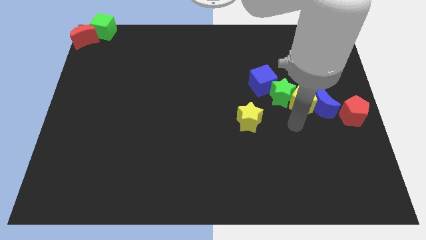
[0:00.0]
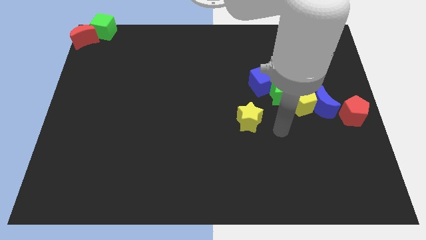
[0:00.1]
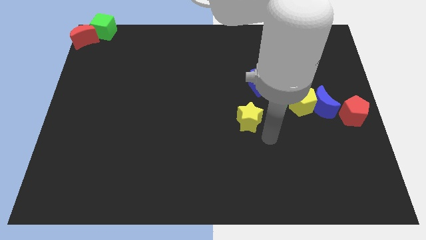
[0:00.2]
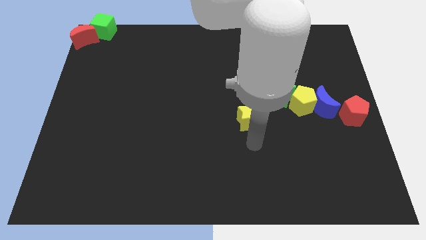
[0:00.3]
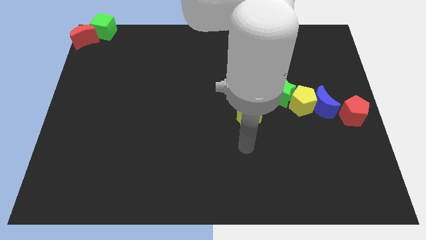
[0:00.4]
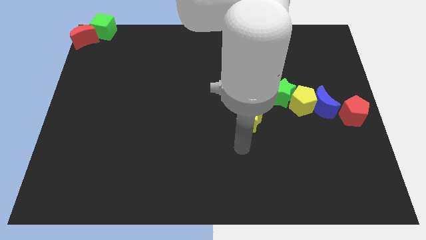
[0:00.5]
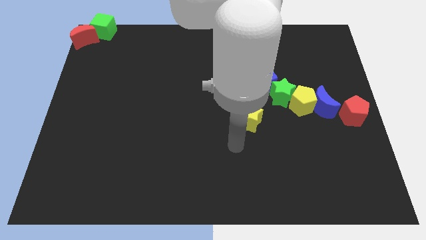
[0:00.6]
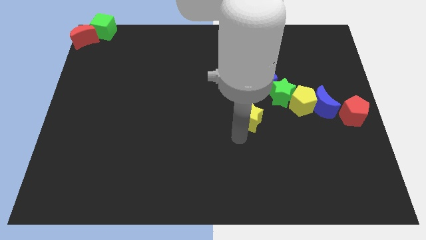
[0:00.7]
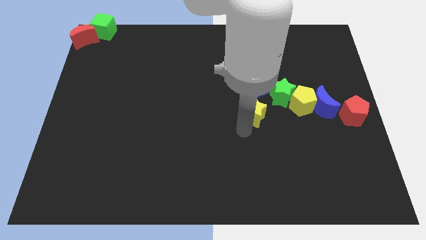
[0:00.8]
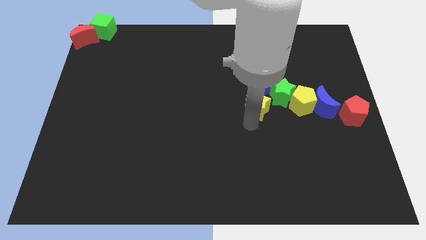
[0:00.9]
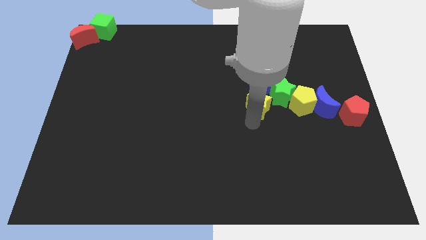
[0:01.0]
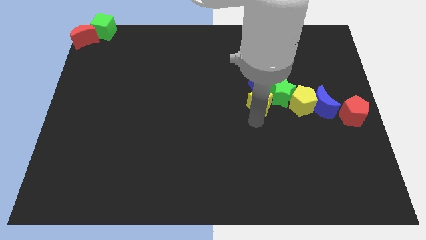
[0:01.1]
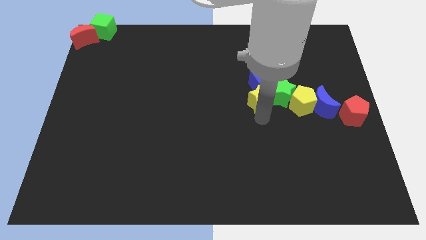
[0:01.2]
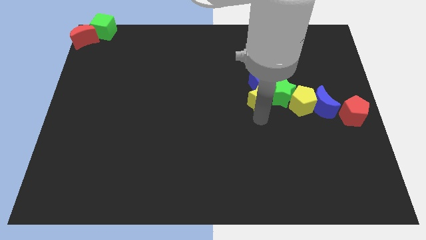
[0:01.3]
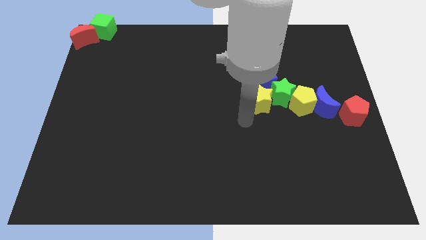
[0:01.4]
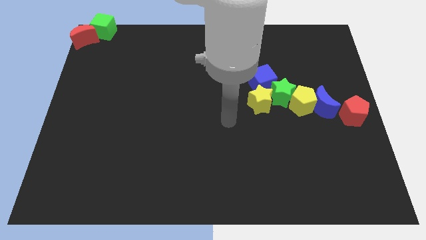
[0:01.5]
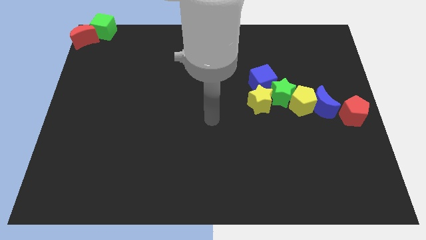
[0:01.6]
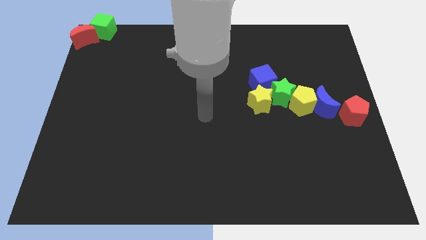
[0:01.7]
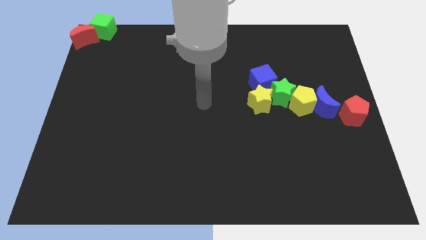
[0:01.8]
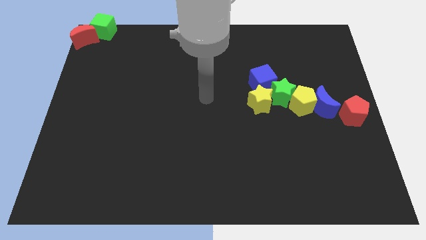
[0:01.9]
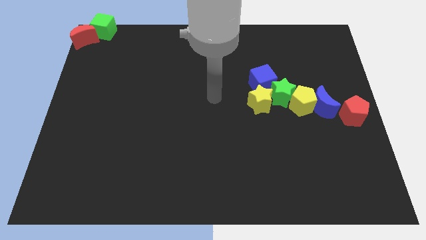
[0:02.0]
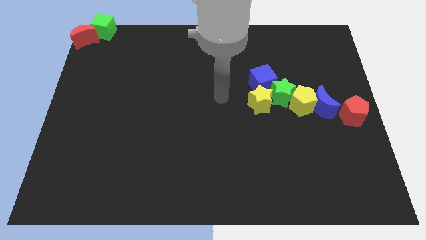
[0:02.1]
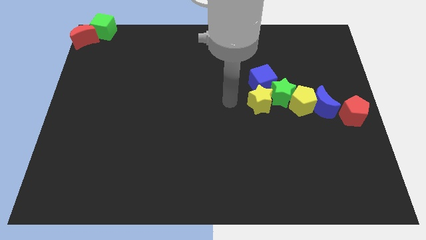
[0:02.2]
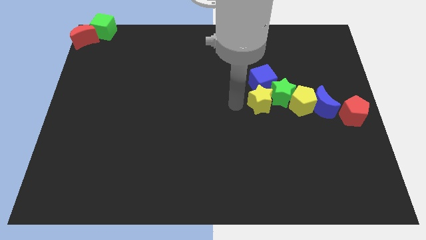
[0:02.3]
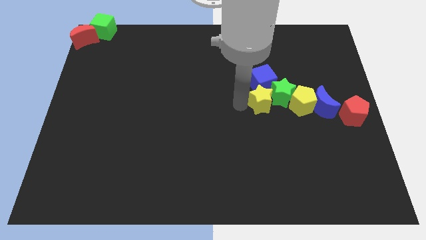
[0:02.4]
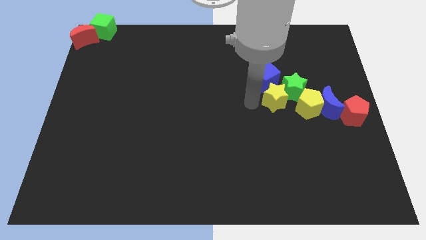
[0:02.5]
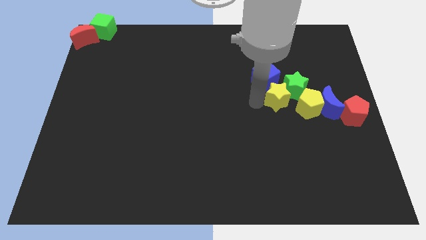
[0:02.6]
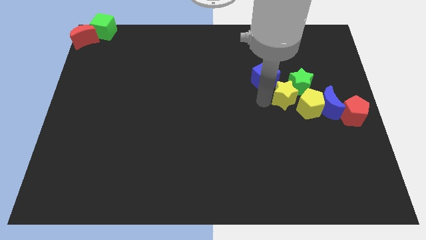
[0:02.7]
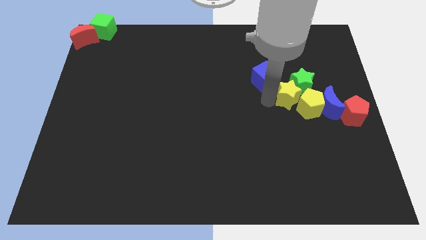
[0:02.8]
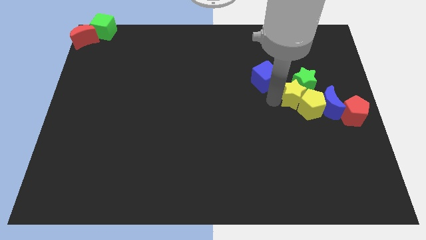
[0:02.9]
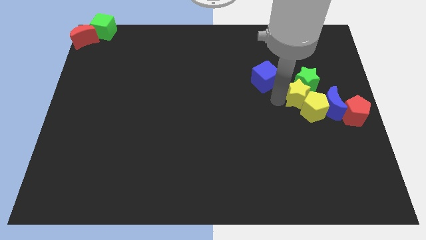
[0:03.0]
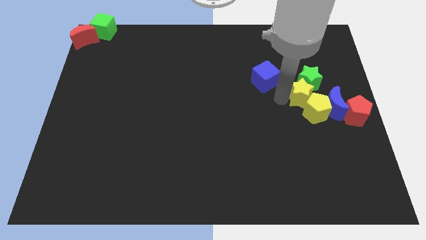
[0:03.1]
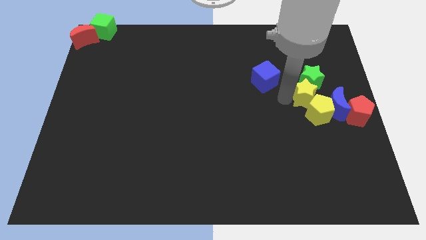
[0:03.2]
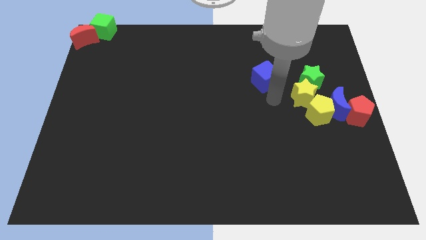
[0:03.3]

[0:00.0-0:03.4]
push the yellow star to the group of blocks

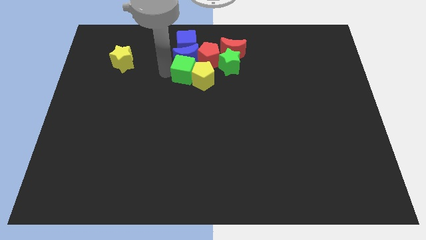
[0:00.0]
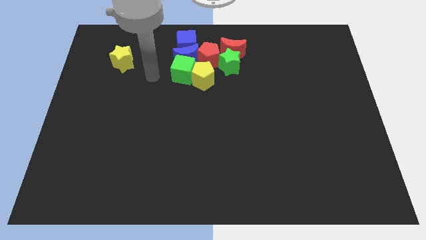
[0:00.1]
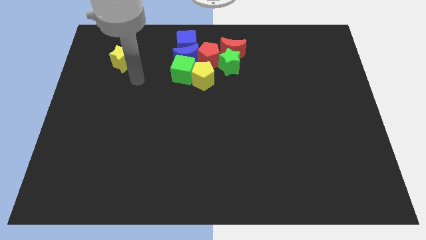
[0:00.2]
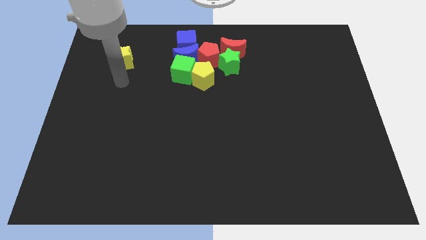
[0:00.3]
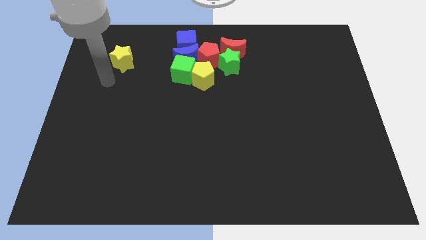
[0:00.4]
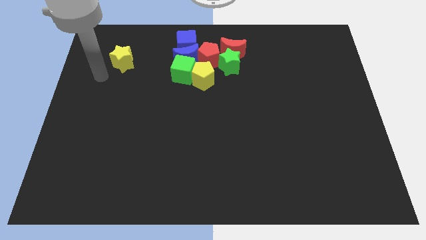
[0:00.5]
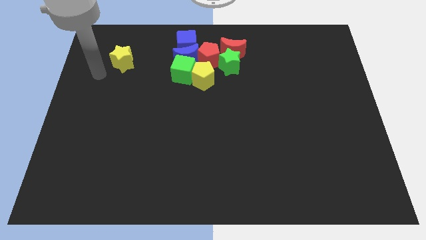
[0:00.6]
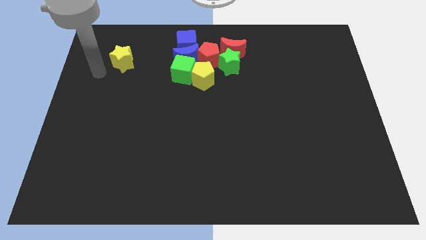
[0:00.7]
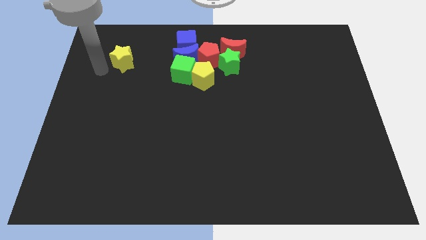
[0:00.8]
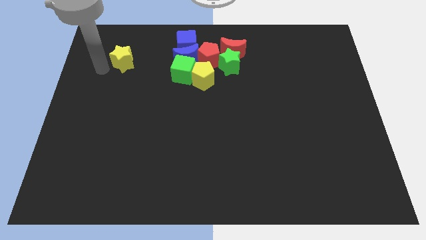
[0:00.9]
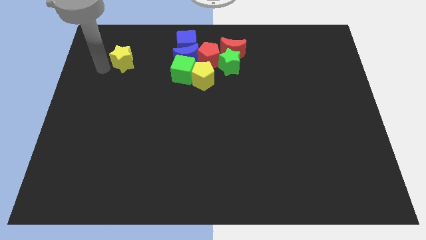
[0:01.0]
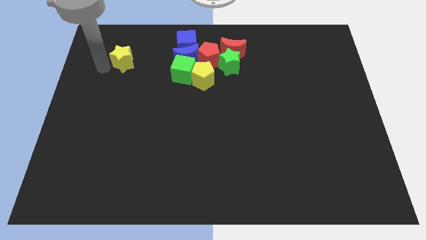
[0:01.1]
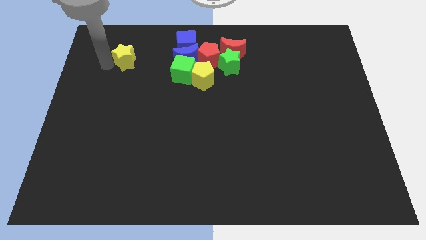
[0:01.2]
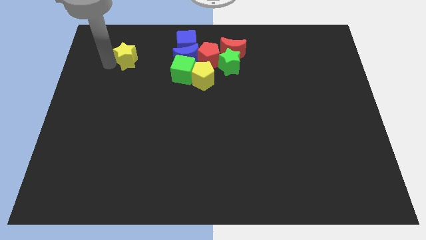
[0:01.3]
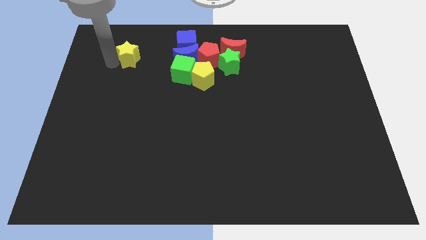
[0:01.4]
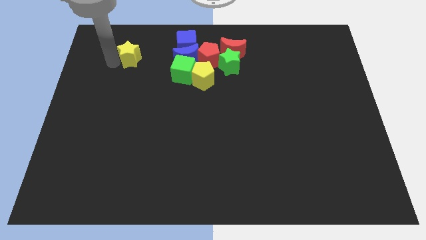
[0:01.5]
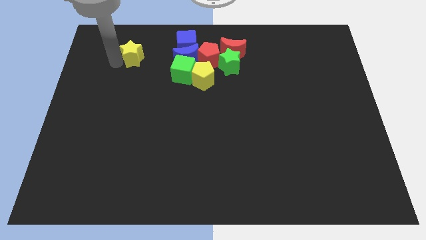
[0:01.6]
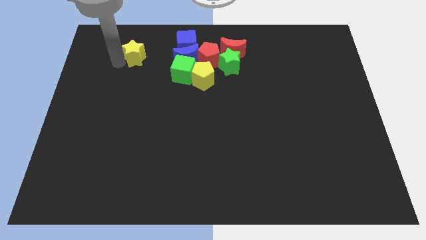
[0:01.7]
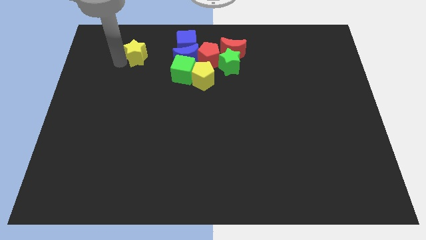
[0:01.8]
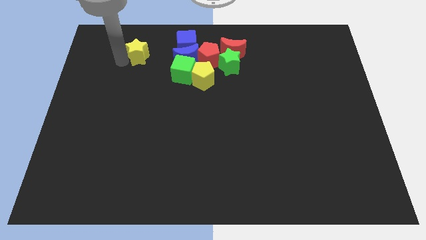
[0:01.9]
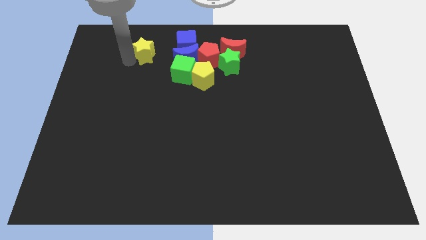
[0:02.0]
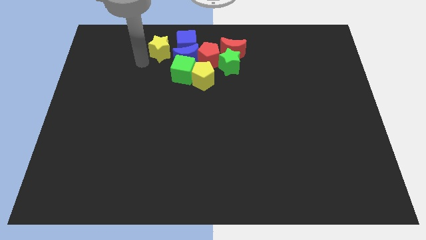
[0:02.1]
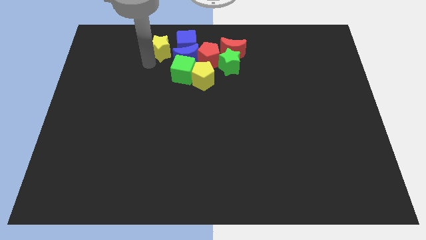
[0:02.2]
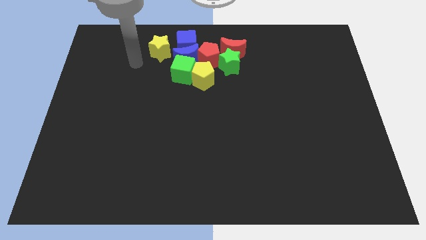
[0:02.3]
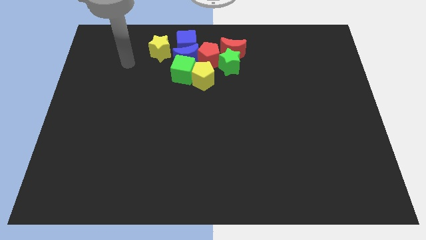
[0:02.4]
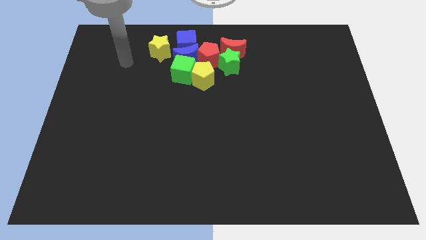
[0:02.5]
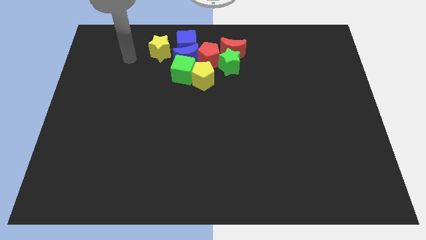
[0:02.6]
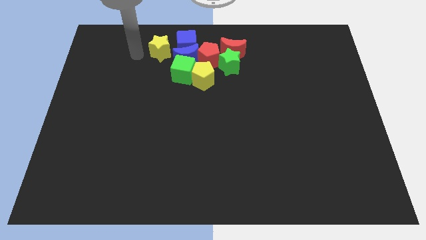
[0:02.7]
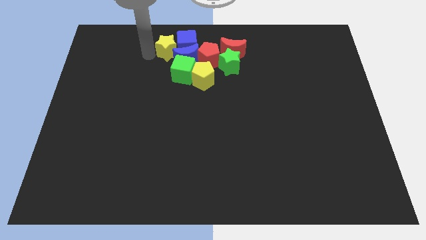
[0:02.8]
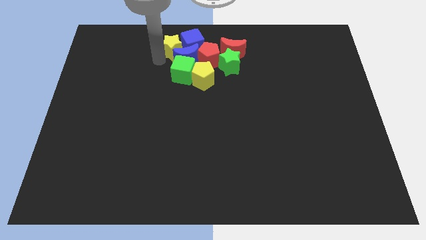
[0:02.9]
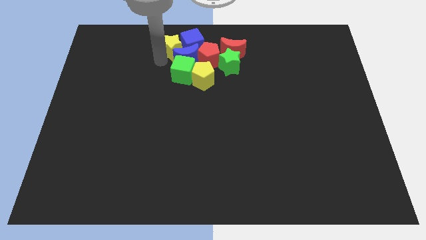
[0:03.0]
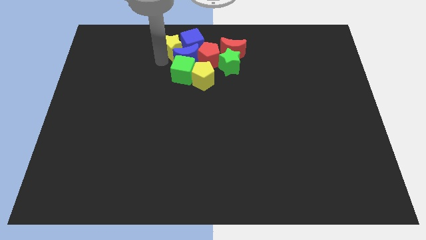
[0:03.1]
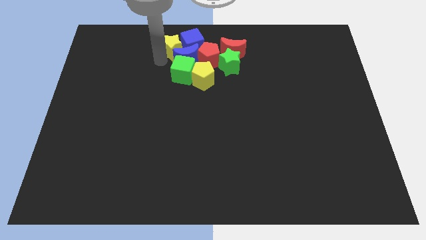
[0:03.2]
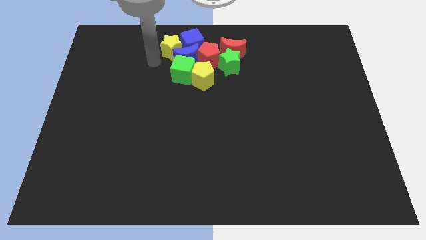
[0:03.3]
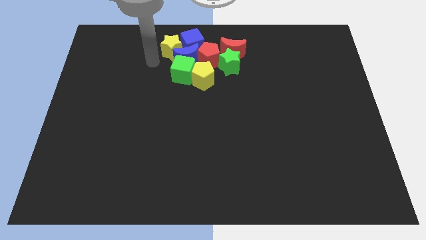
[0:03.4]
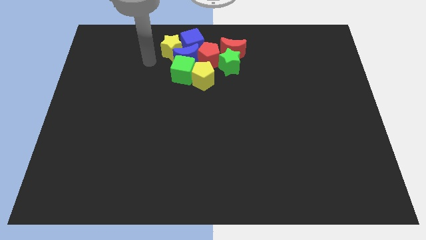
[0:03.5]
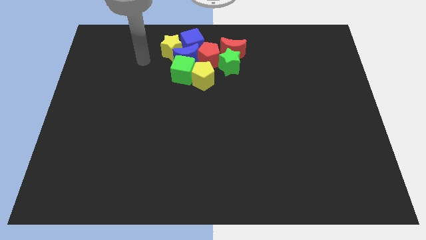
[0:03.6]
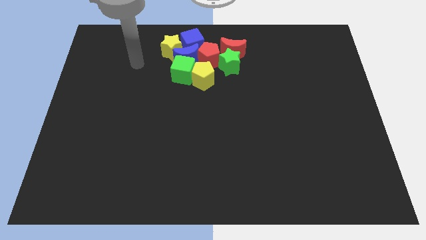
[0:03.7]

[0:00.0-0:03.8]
push the yellow star in to the group of blocks in the center top

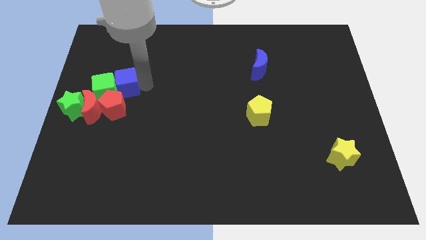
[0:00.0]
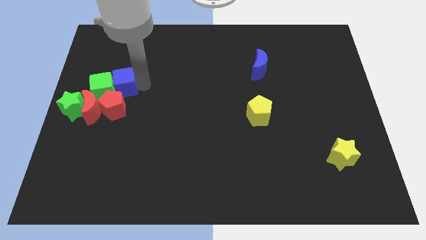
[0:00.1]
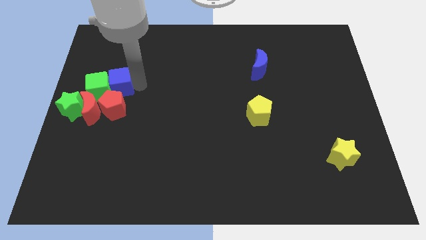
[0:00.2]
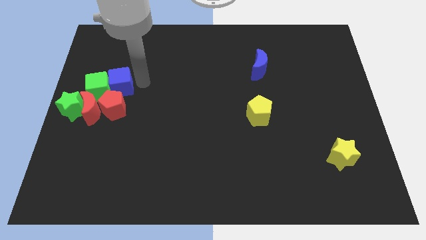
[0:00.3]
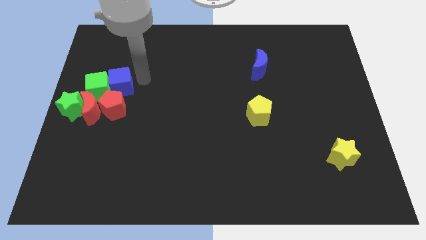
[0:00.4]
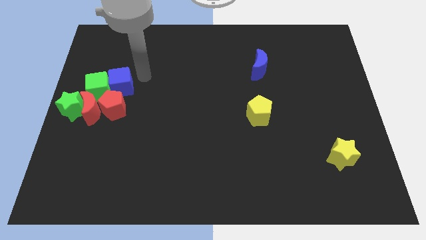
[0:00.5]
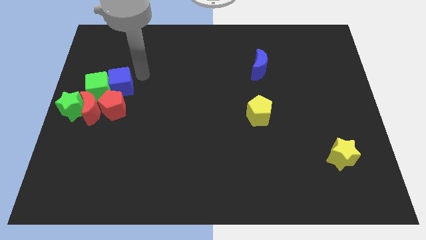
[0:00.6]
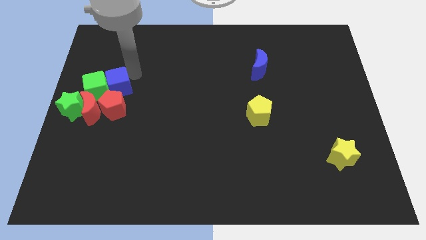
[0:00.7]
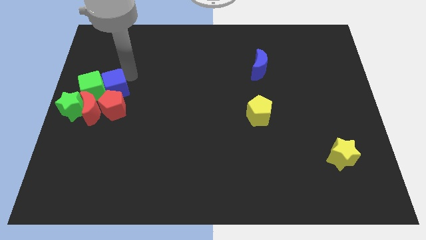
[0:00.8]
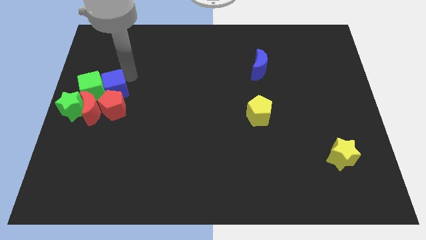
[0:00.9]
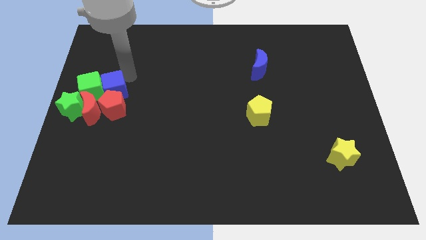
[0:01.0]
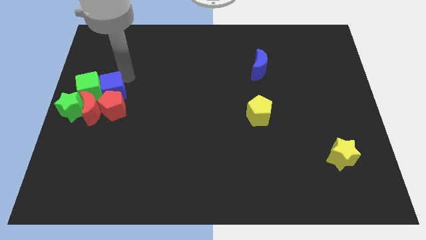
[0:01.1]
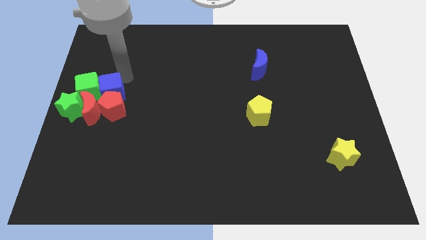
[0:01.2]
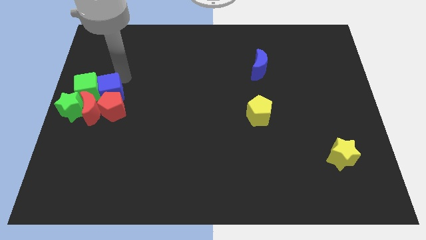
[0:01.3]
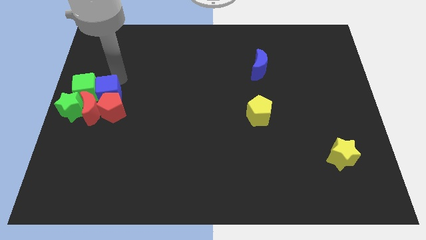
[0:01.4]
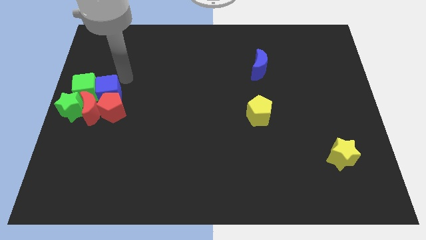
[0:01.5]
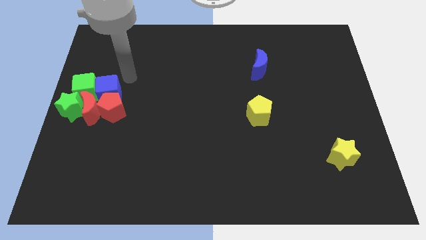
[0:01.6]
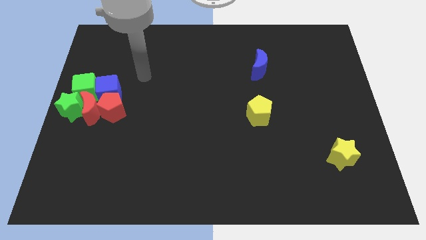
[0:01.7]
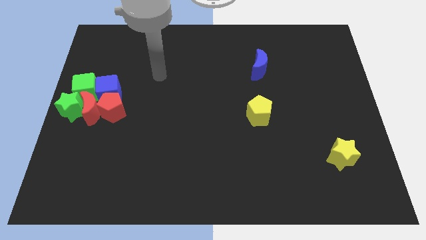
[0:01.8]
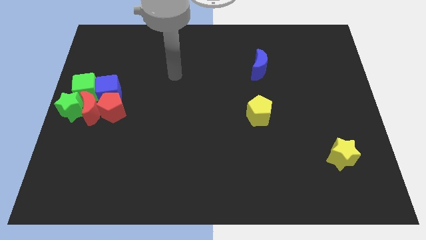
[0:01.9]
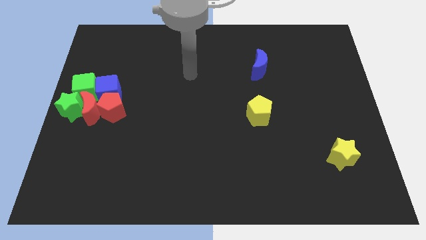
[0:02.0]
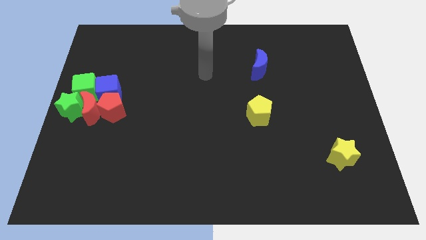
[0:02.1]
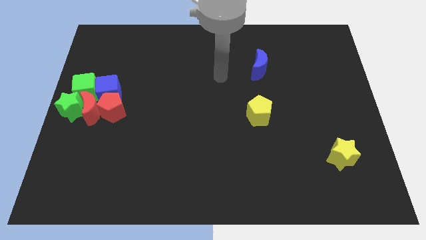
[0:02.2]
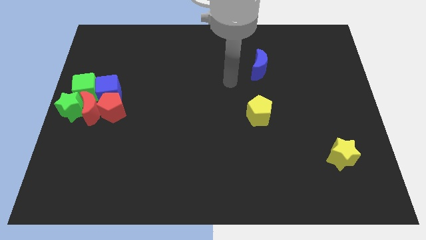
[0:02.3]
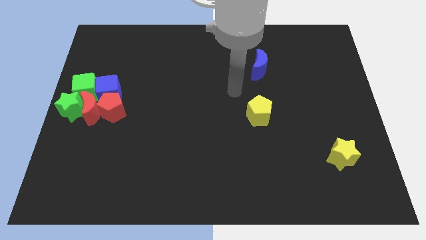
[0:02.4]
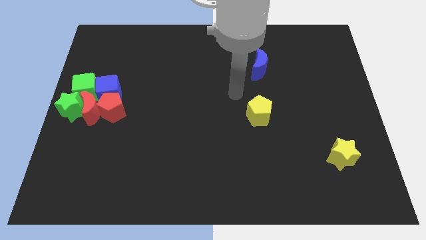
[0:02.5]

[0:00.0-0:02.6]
move the blue cube along with the green cube to the top of the red blocks
